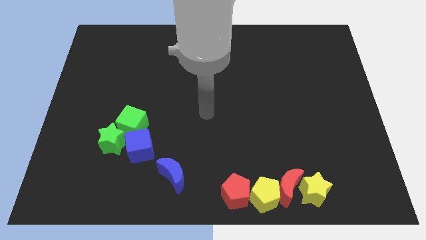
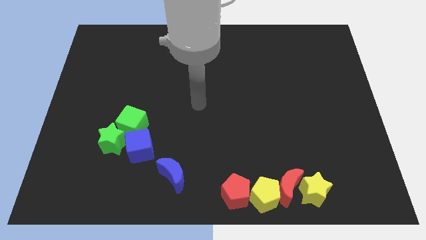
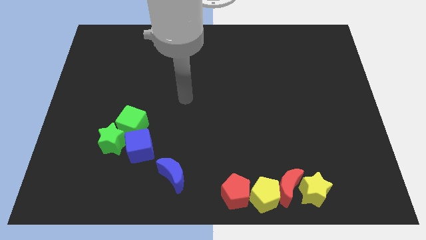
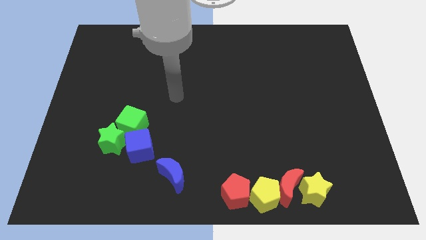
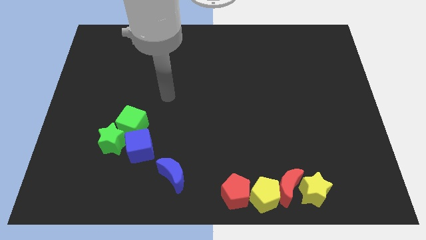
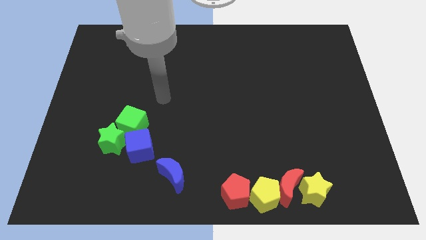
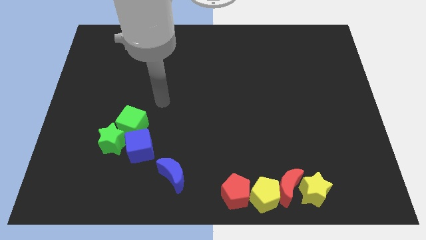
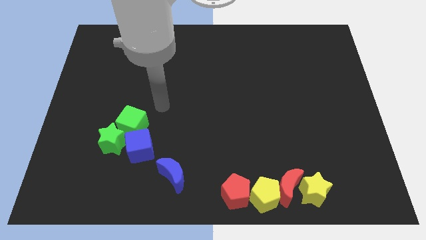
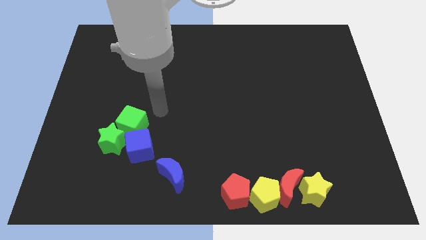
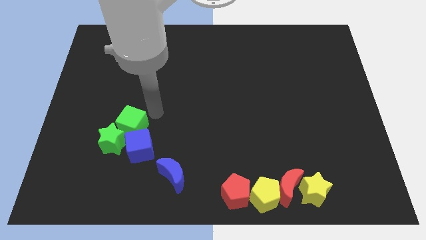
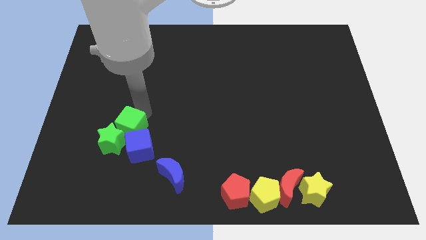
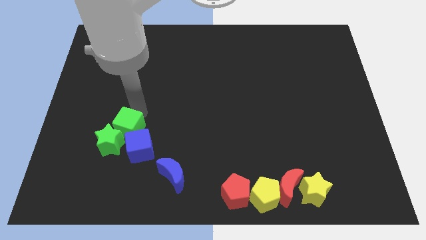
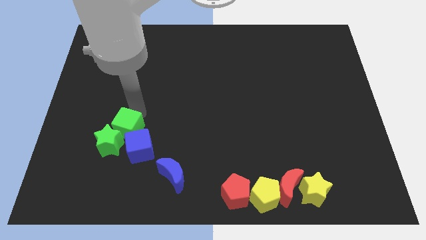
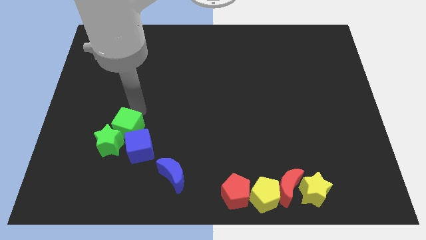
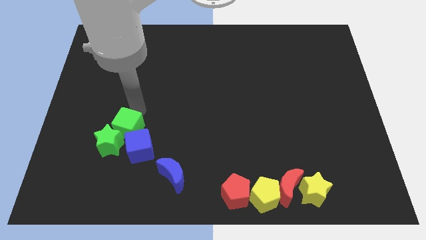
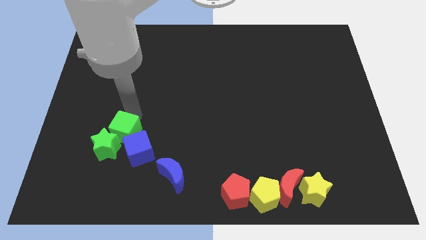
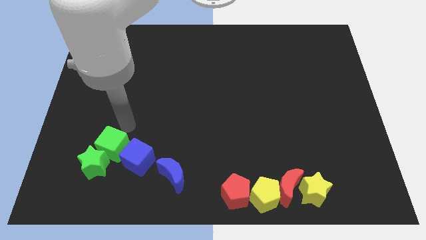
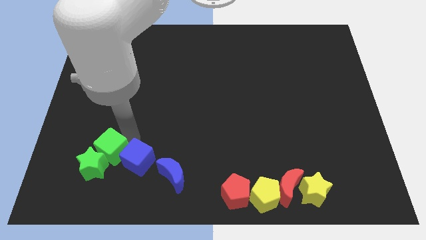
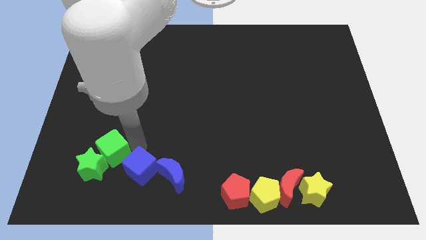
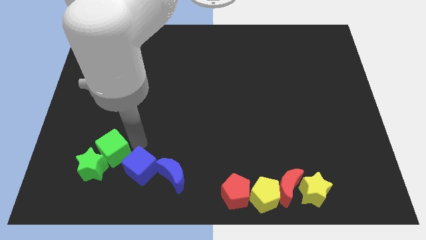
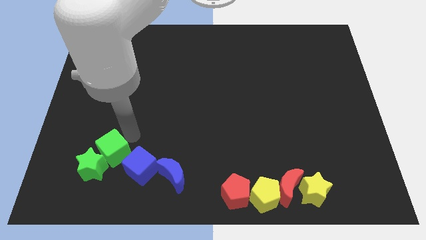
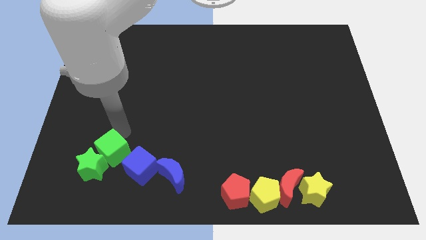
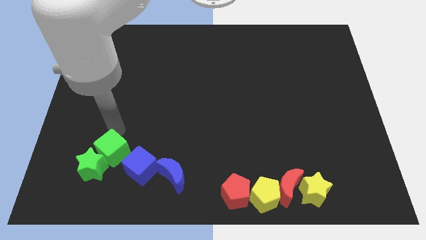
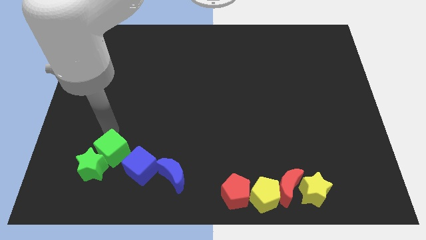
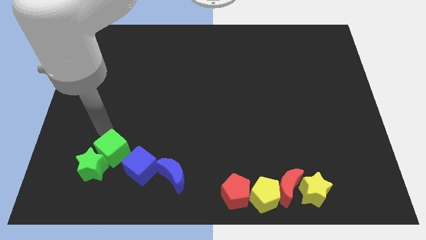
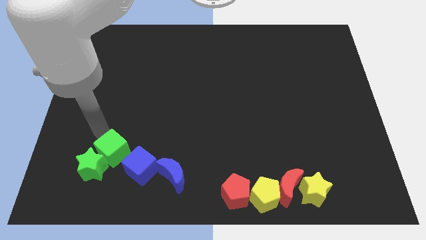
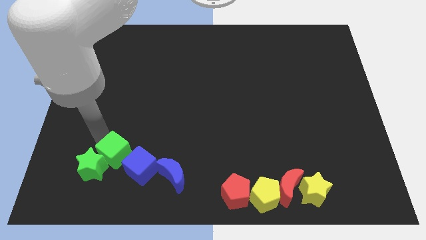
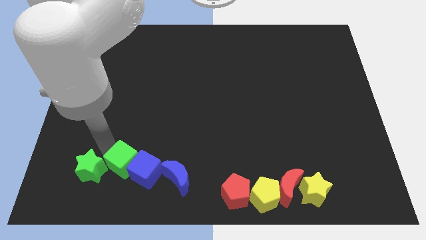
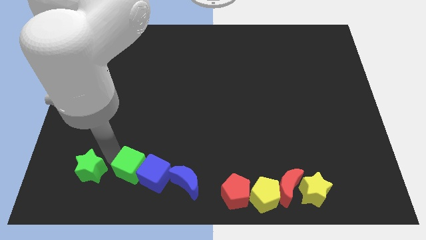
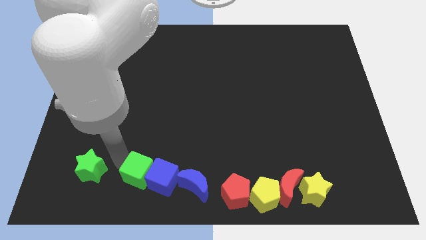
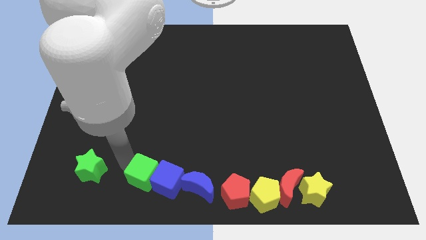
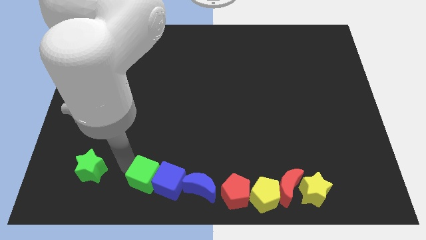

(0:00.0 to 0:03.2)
push green cube into blue cube

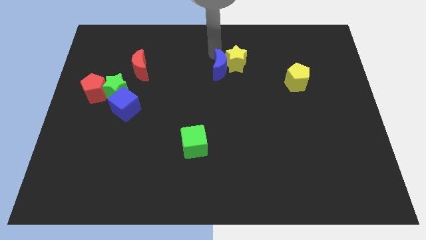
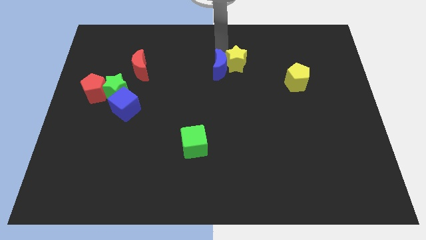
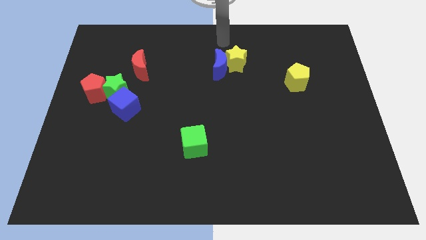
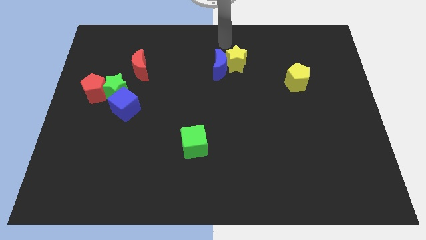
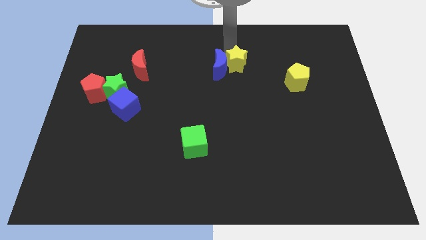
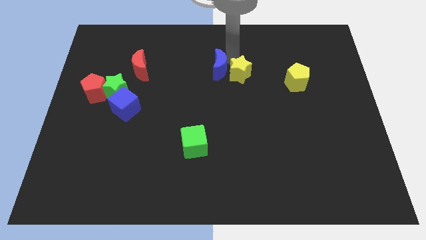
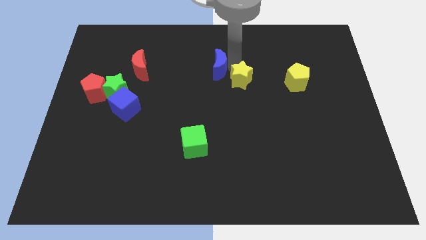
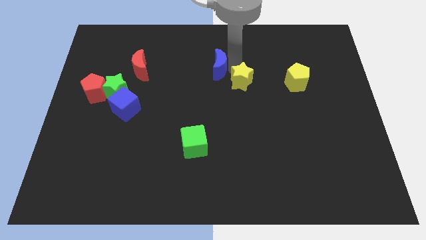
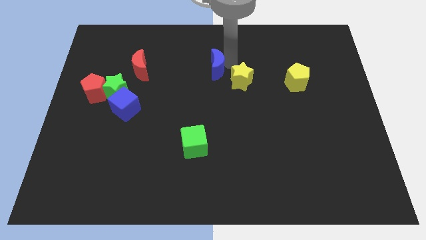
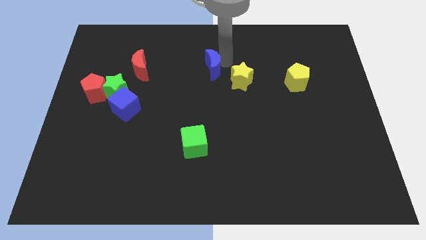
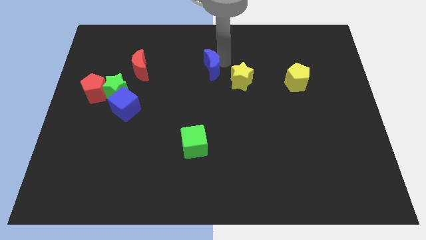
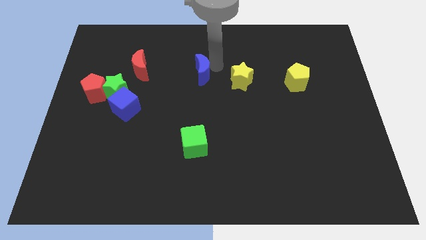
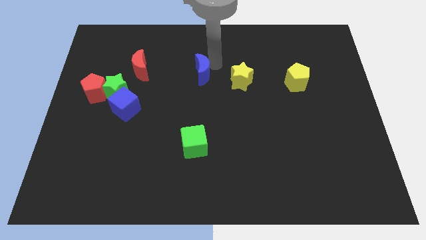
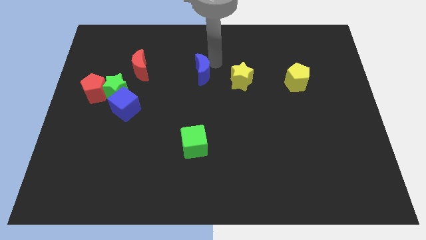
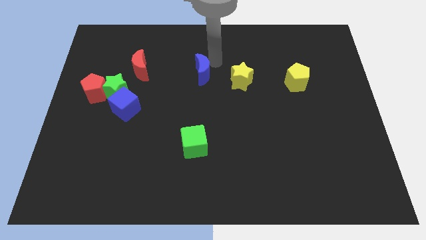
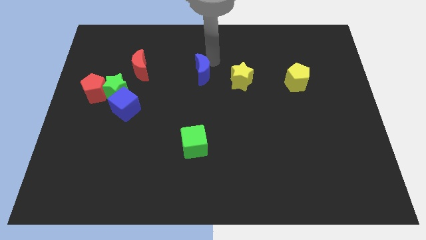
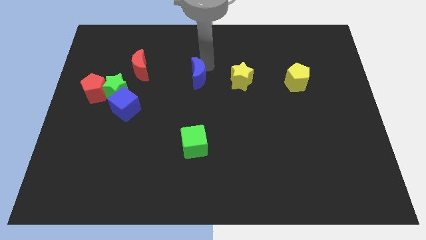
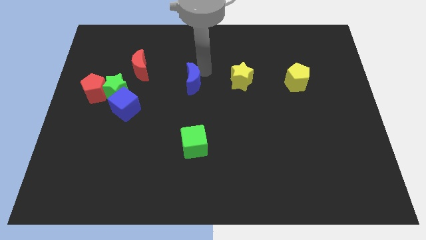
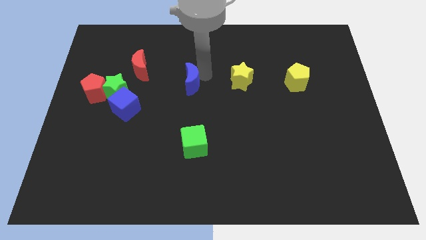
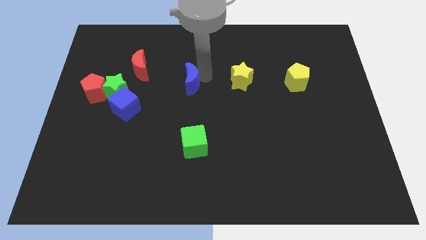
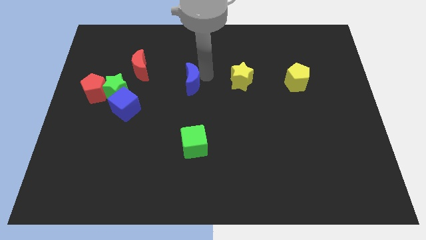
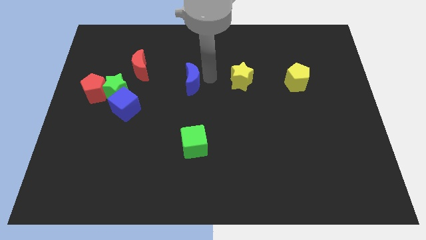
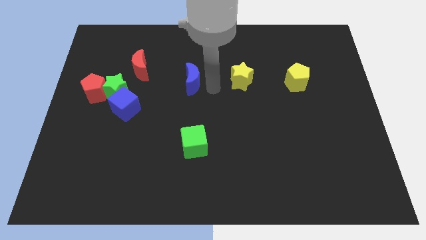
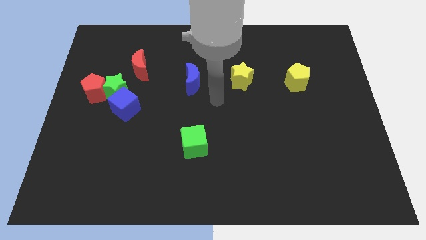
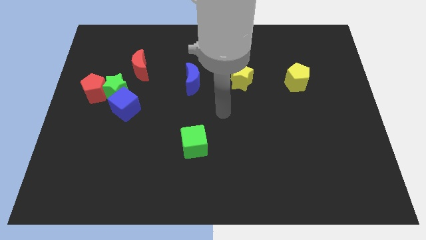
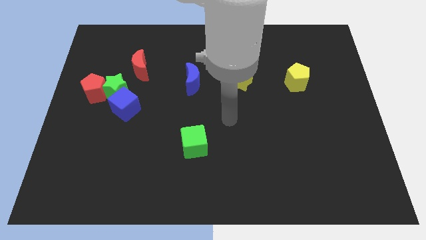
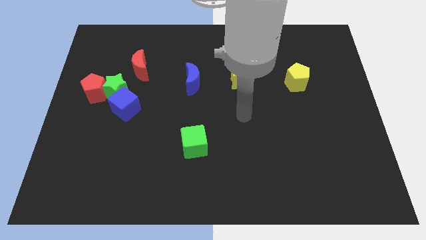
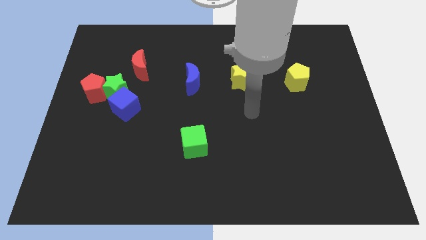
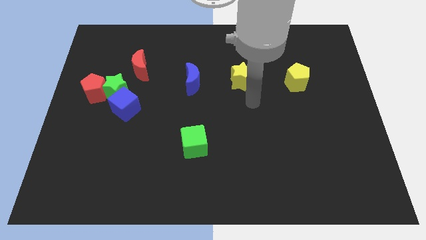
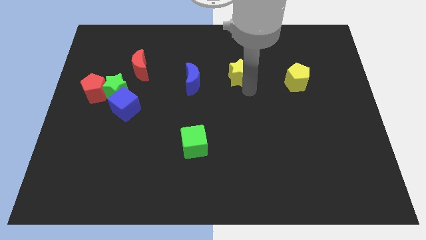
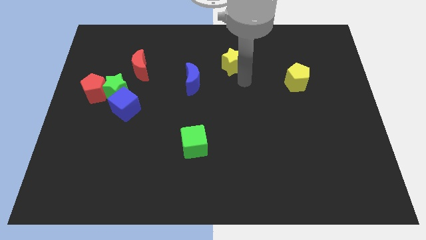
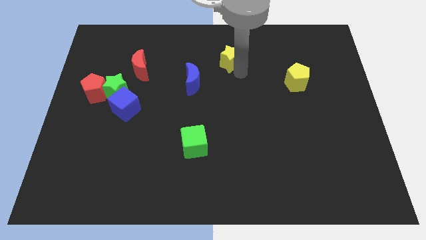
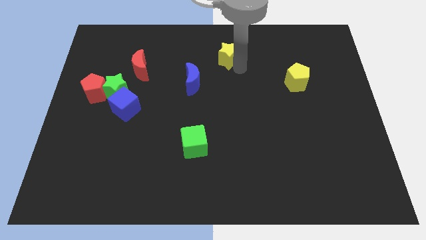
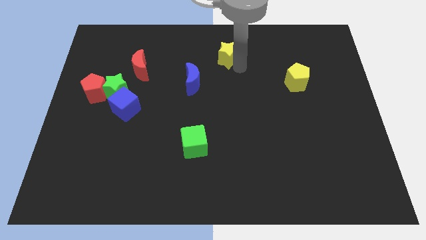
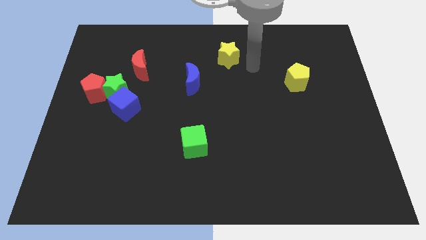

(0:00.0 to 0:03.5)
place yellow star and the blue crescent in a diagonal line

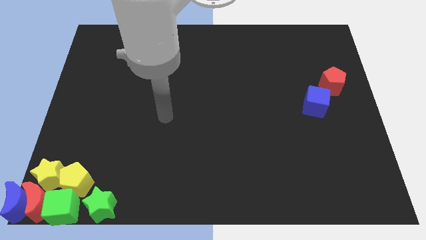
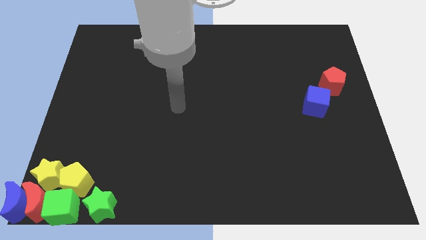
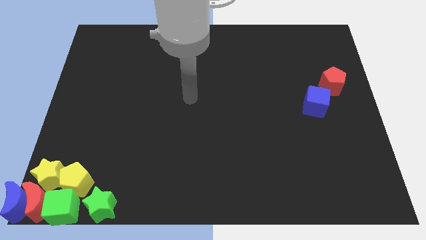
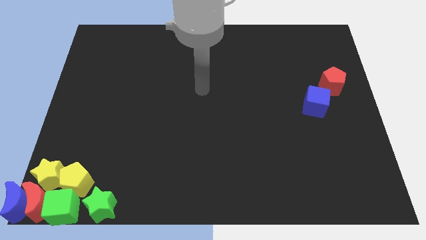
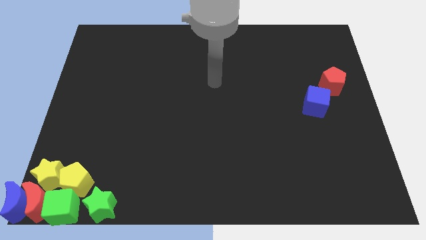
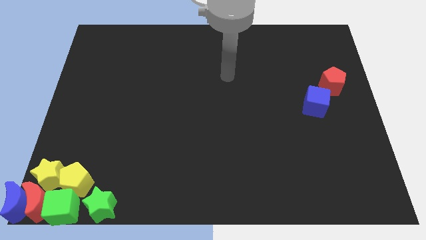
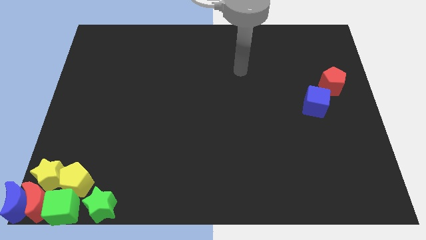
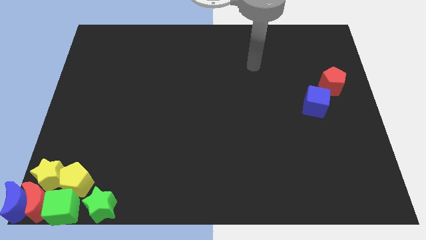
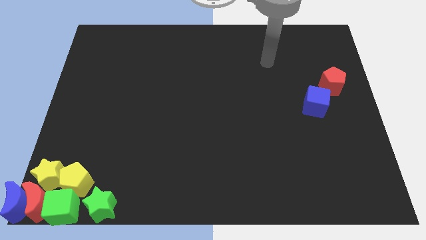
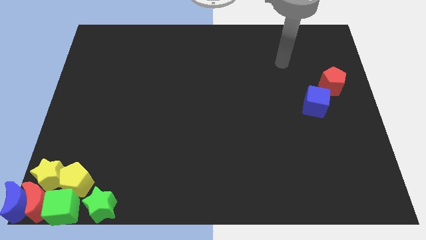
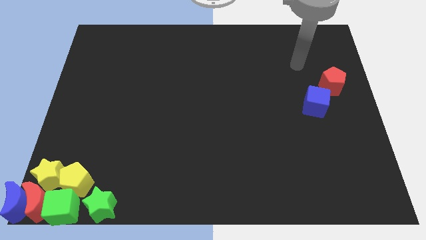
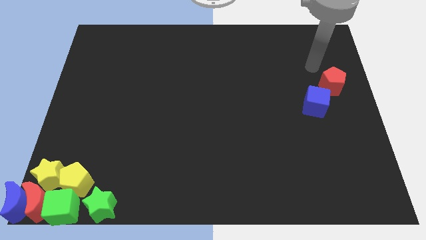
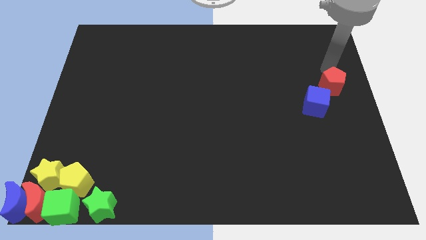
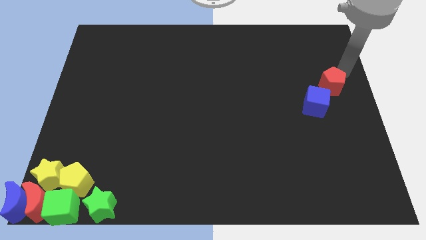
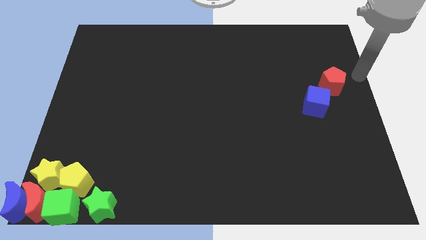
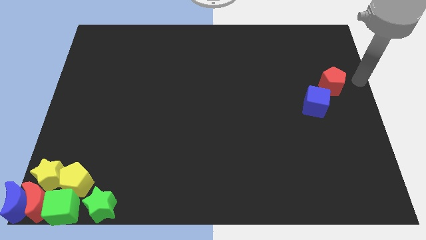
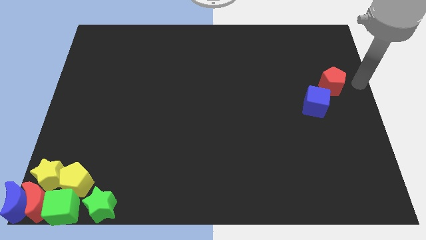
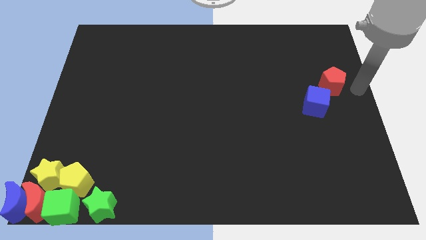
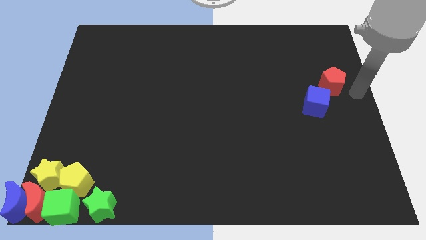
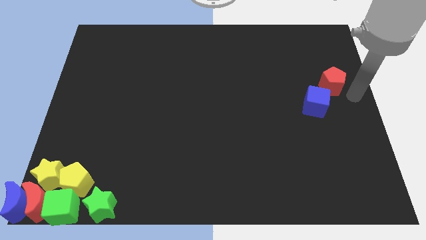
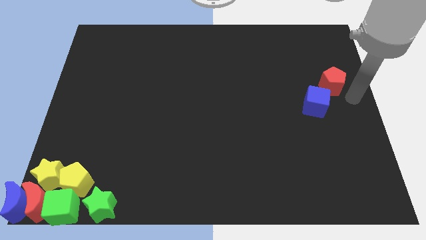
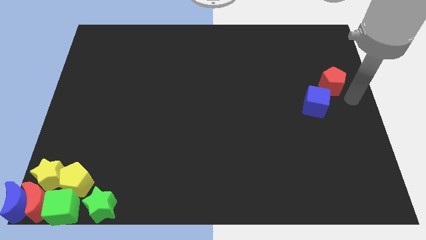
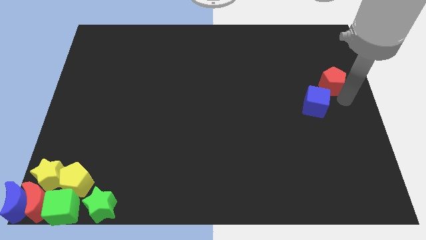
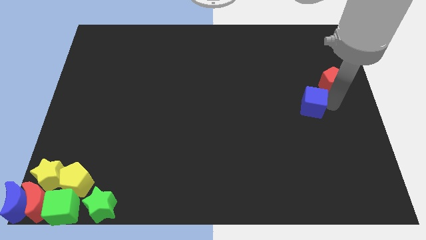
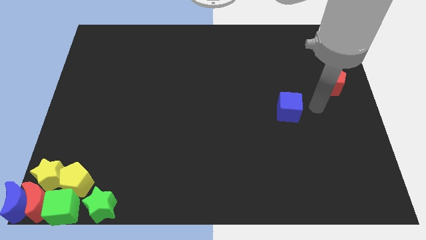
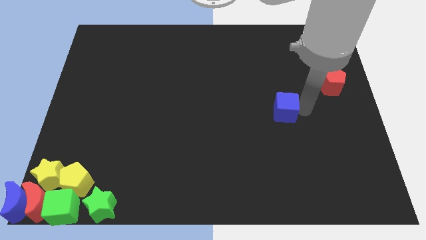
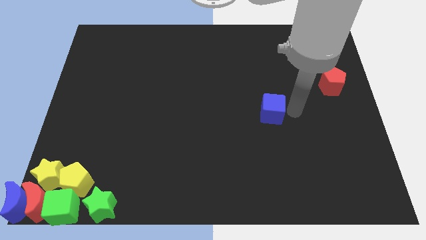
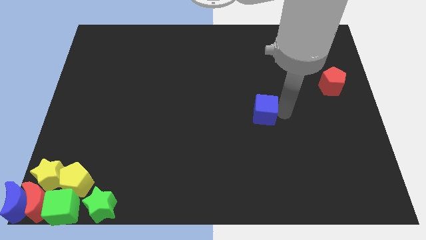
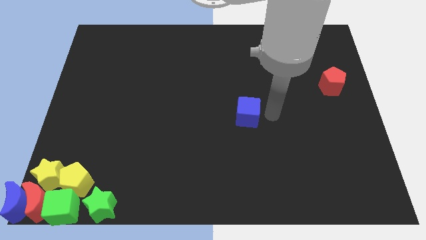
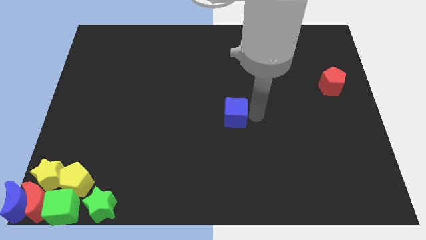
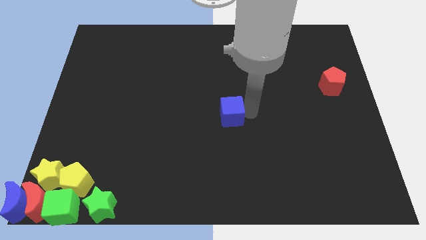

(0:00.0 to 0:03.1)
place the blue cube to the center of the board
